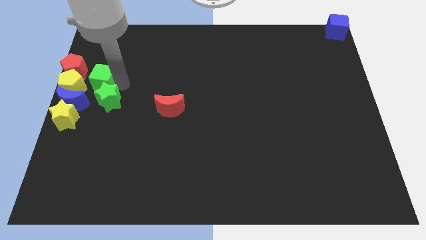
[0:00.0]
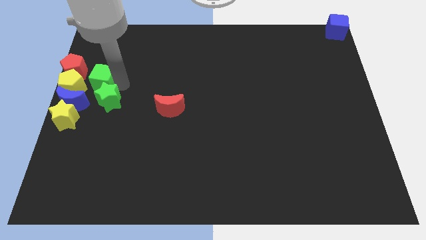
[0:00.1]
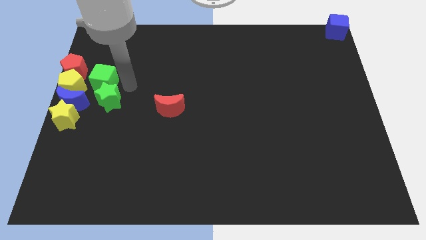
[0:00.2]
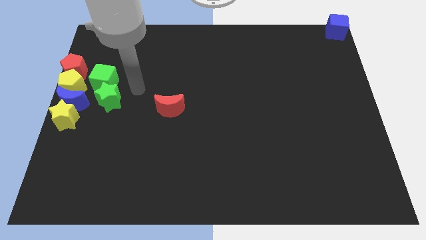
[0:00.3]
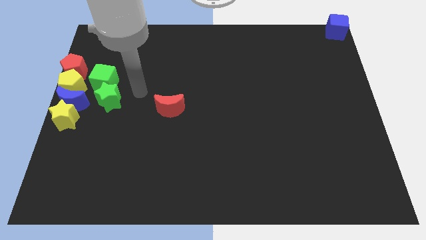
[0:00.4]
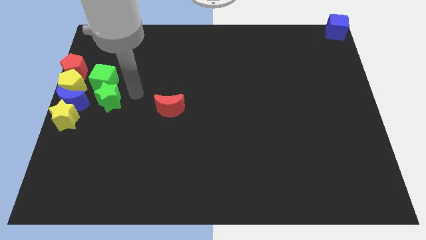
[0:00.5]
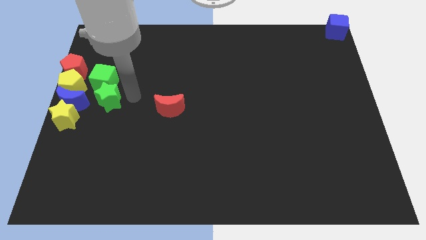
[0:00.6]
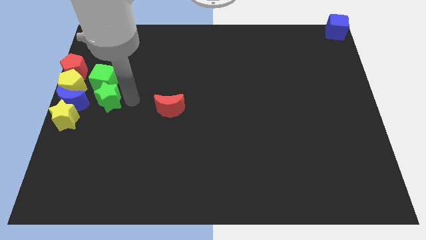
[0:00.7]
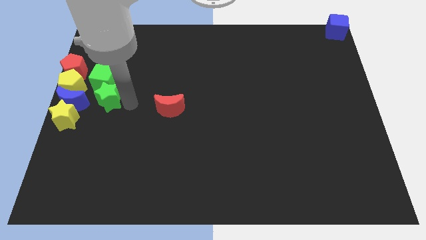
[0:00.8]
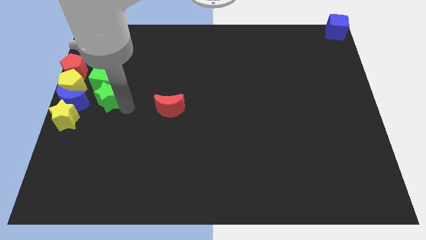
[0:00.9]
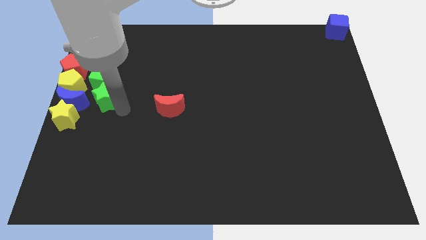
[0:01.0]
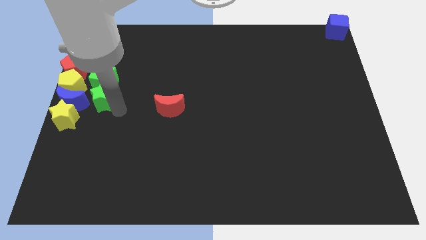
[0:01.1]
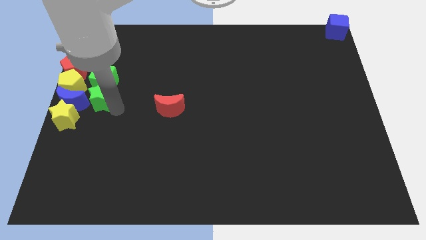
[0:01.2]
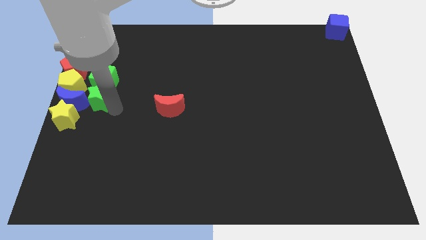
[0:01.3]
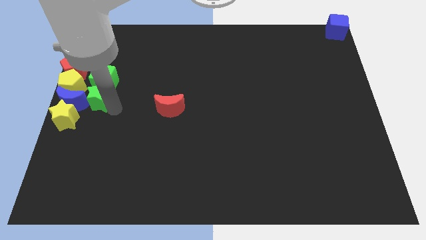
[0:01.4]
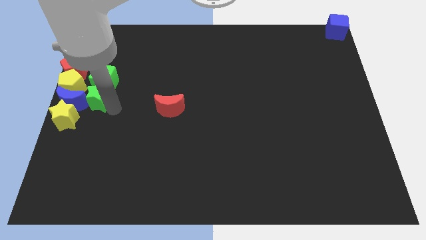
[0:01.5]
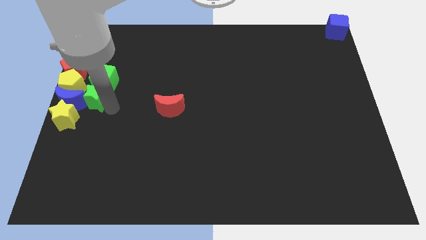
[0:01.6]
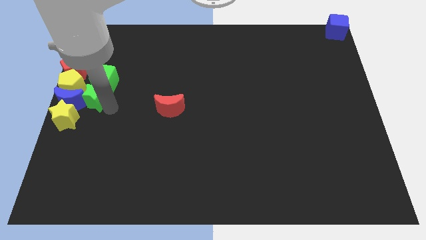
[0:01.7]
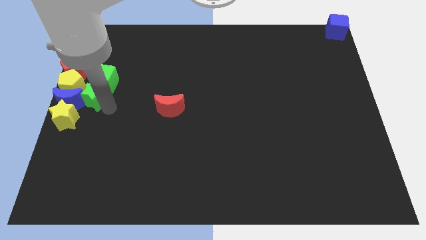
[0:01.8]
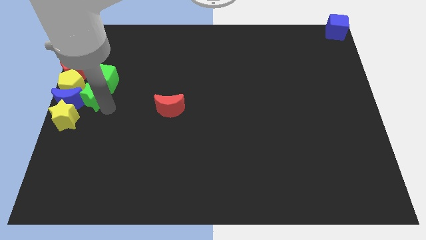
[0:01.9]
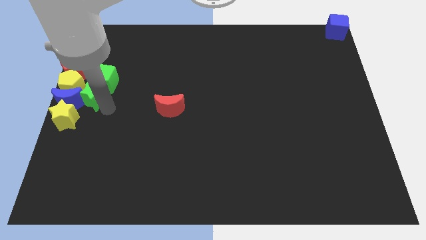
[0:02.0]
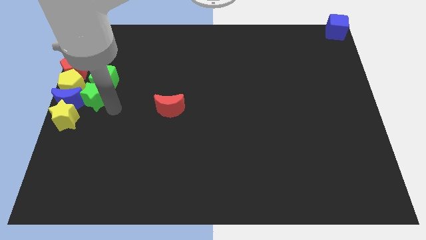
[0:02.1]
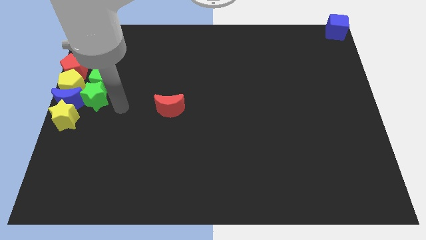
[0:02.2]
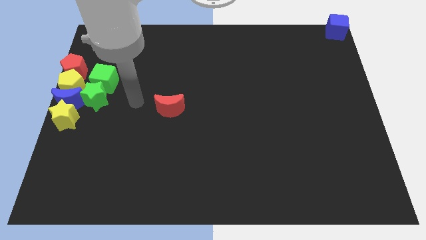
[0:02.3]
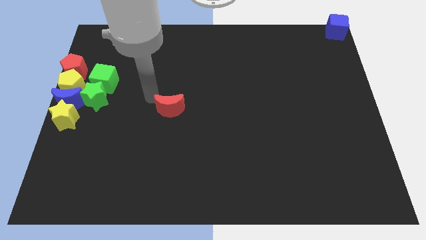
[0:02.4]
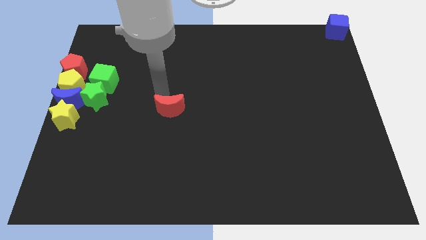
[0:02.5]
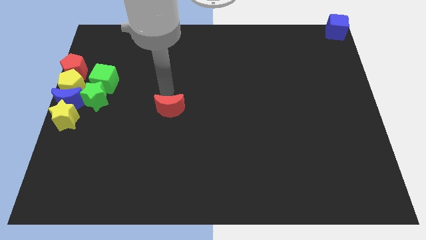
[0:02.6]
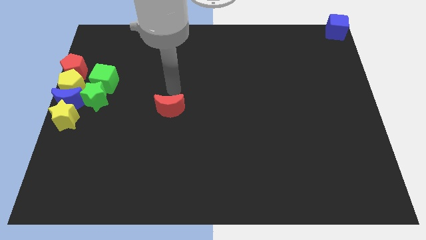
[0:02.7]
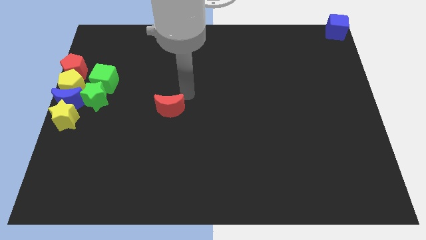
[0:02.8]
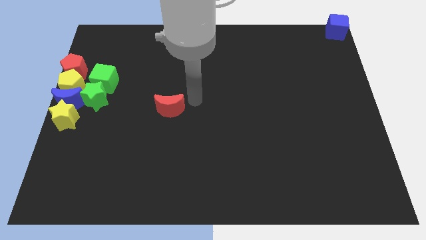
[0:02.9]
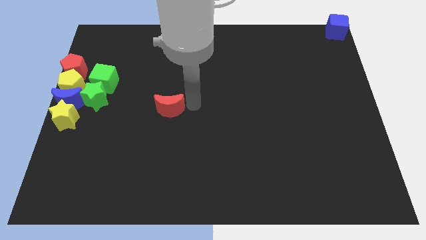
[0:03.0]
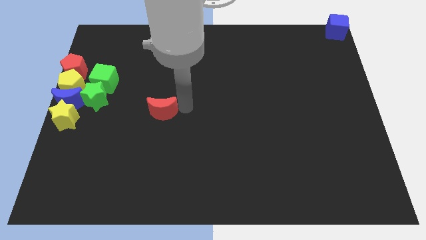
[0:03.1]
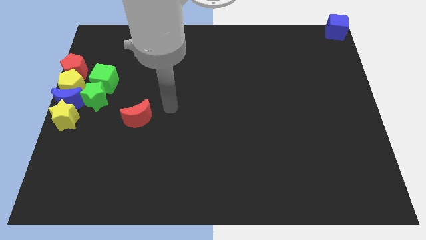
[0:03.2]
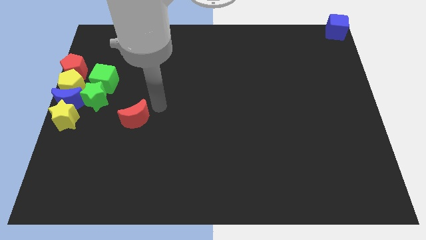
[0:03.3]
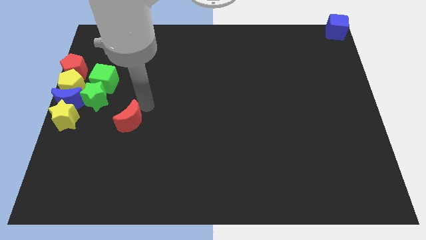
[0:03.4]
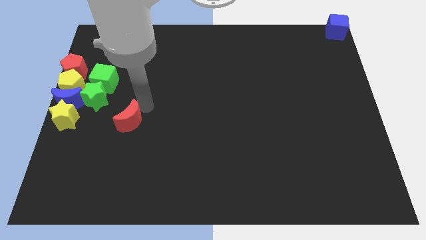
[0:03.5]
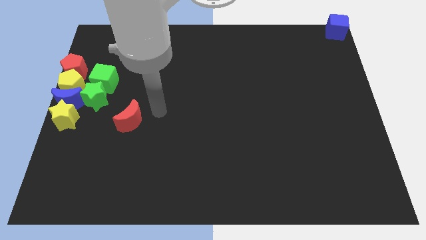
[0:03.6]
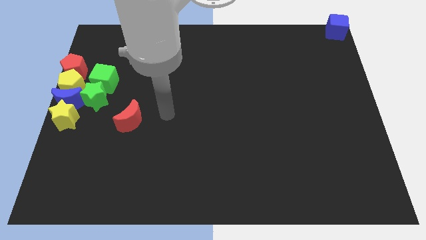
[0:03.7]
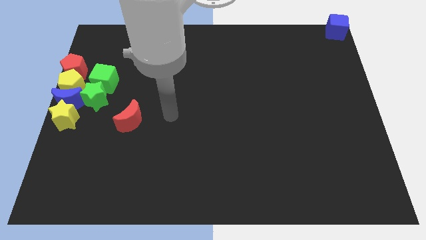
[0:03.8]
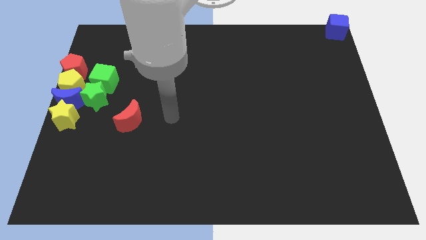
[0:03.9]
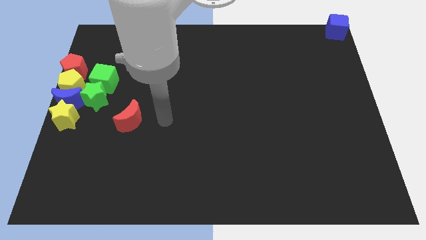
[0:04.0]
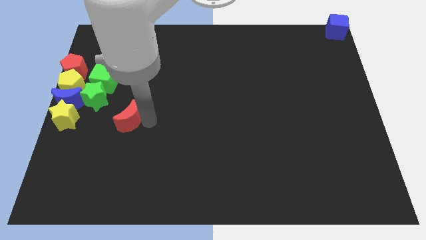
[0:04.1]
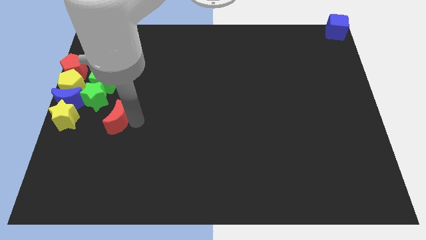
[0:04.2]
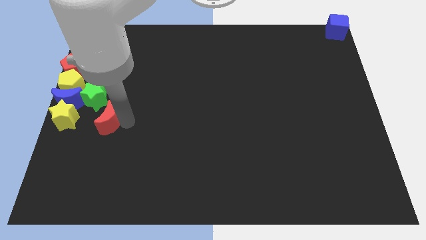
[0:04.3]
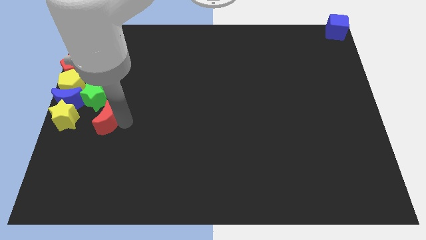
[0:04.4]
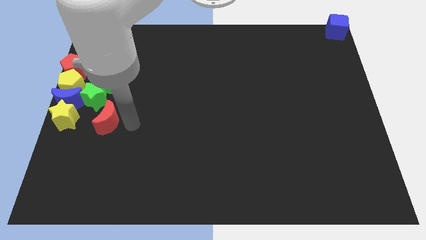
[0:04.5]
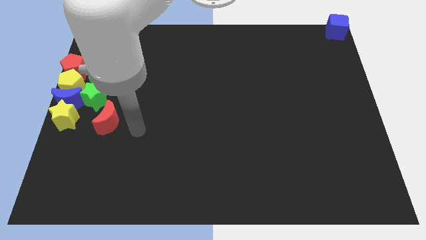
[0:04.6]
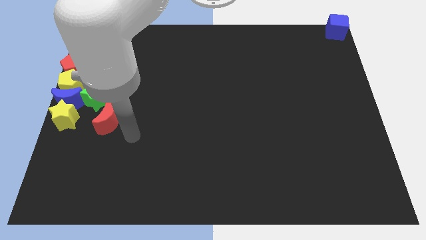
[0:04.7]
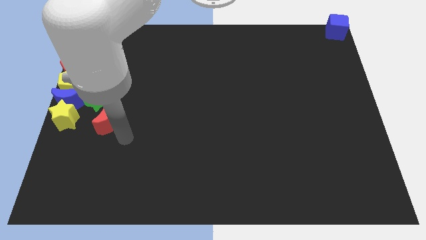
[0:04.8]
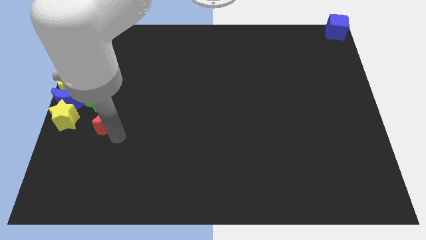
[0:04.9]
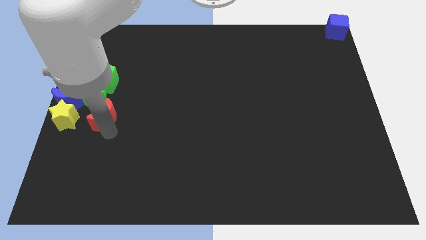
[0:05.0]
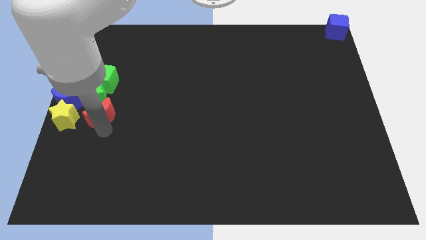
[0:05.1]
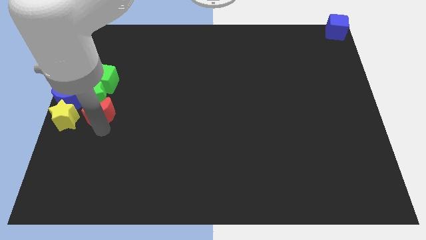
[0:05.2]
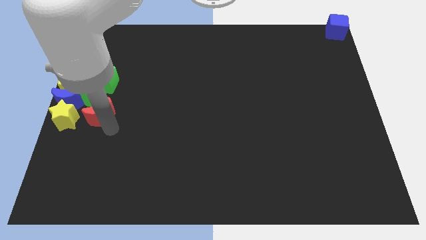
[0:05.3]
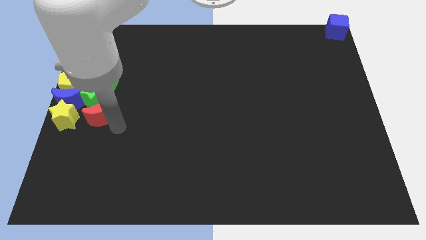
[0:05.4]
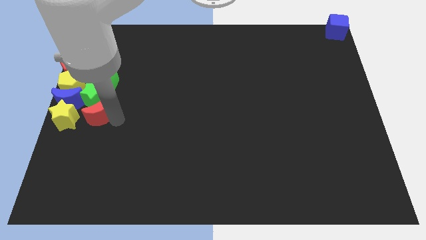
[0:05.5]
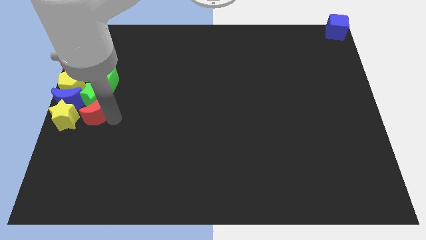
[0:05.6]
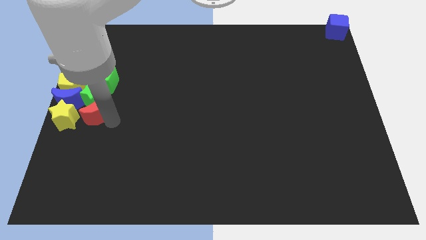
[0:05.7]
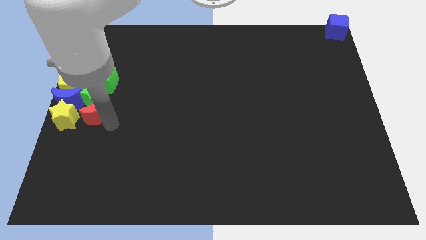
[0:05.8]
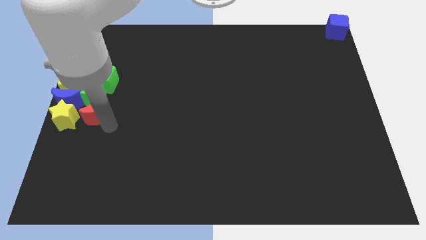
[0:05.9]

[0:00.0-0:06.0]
move the red moon below the green star

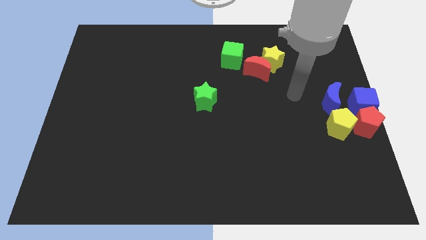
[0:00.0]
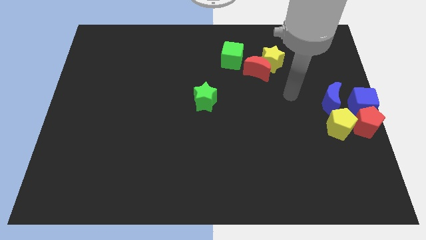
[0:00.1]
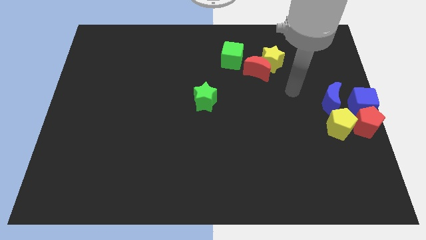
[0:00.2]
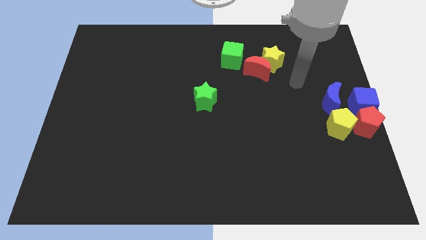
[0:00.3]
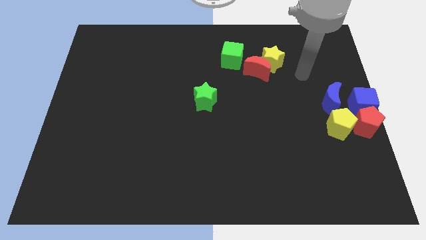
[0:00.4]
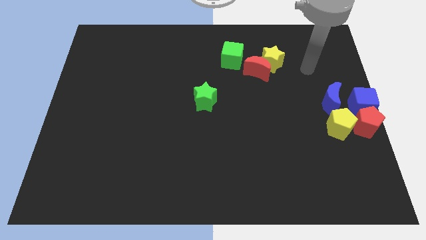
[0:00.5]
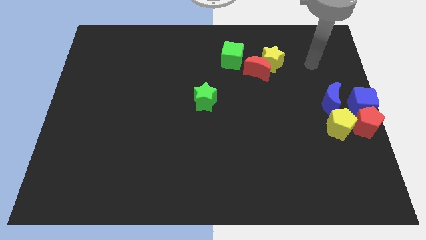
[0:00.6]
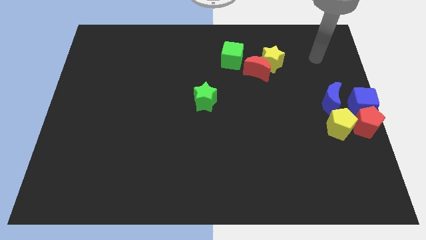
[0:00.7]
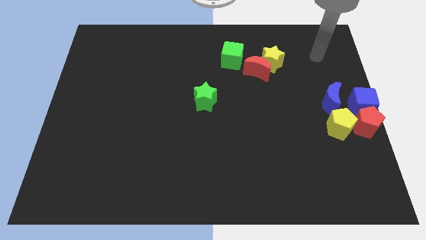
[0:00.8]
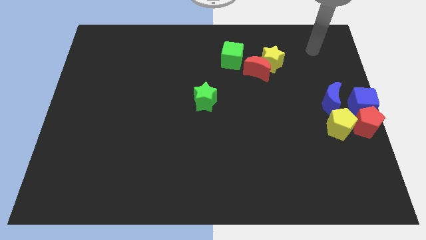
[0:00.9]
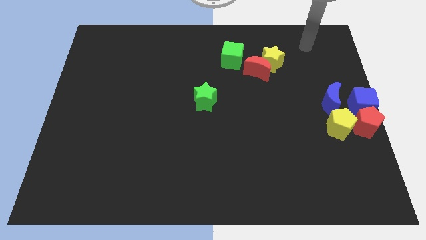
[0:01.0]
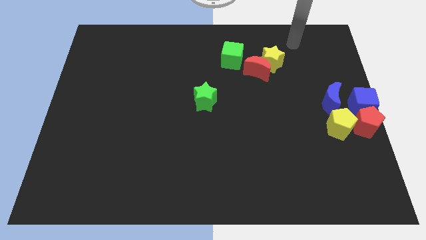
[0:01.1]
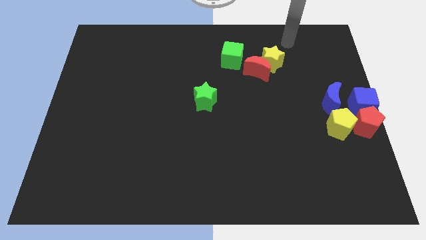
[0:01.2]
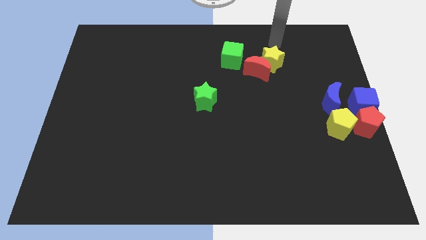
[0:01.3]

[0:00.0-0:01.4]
move the arm towards the yellow star

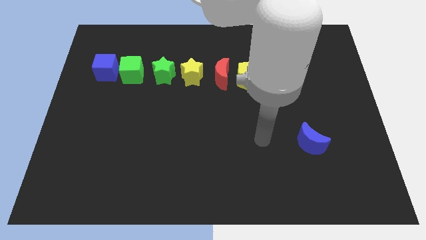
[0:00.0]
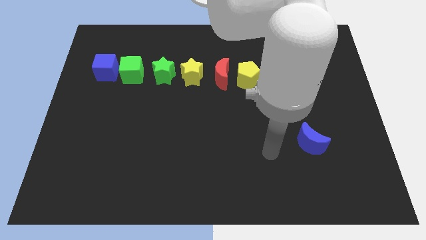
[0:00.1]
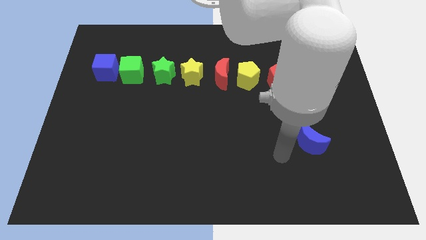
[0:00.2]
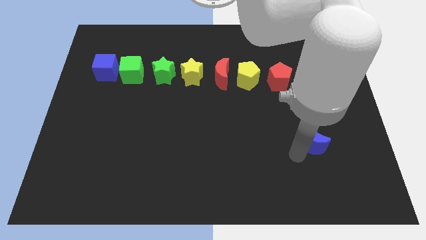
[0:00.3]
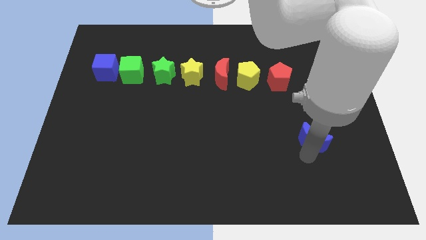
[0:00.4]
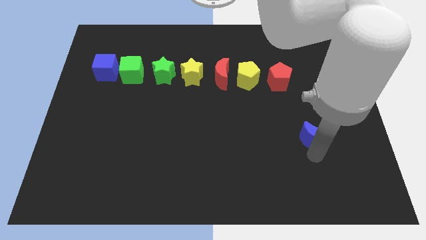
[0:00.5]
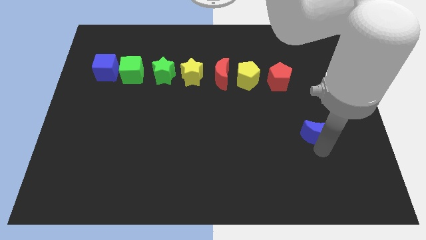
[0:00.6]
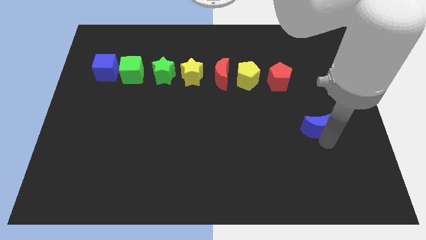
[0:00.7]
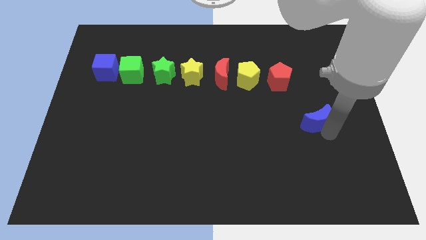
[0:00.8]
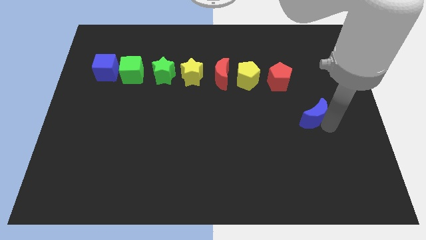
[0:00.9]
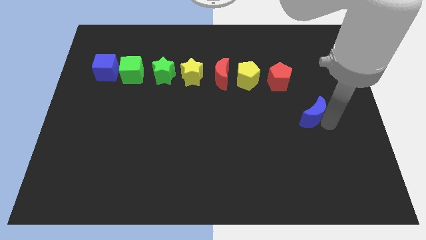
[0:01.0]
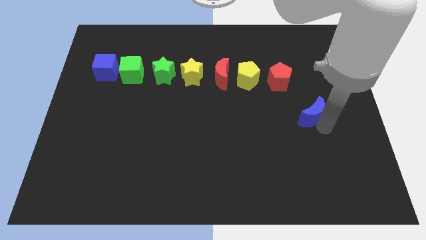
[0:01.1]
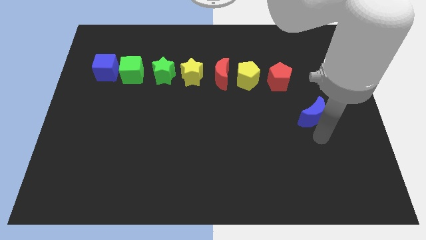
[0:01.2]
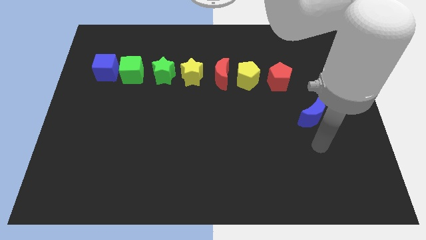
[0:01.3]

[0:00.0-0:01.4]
push the blue moon towards the red pentagon
